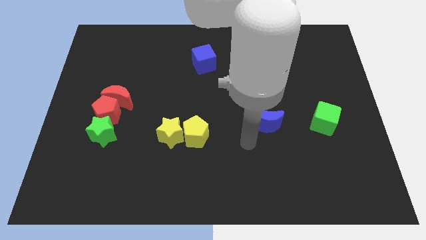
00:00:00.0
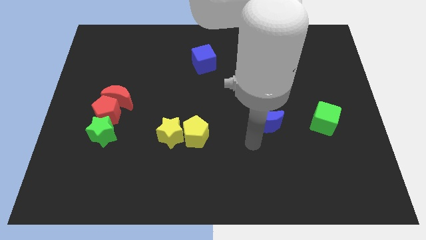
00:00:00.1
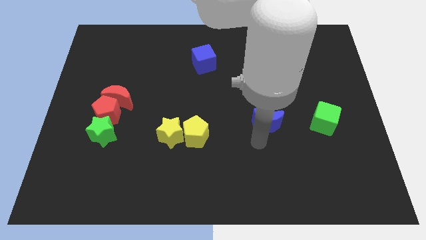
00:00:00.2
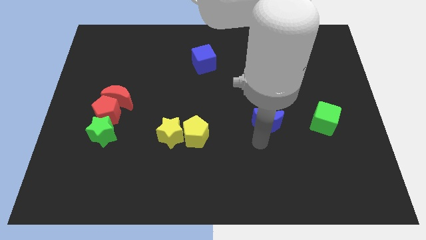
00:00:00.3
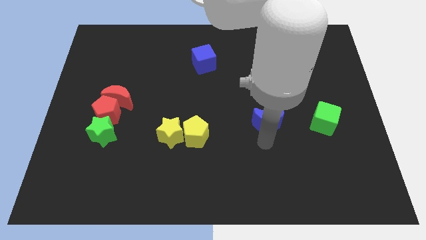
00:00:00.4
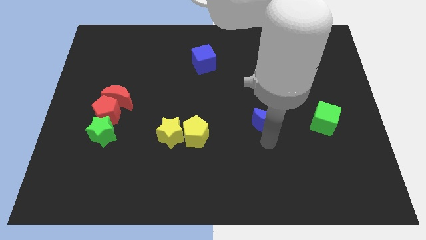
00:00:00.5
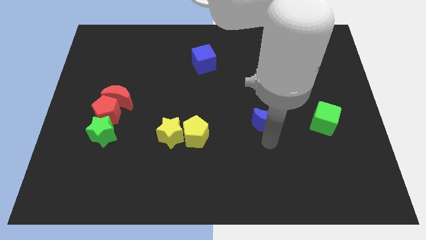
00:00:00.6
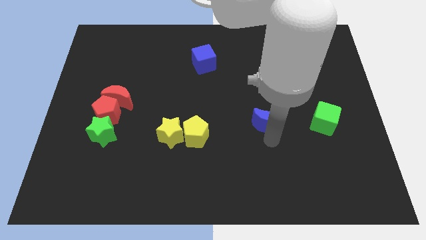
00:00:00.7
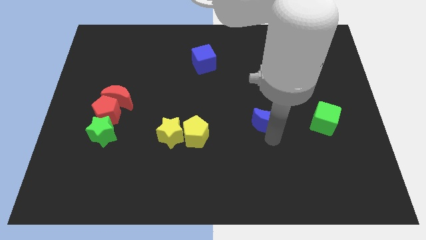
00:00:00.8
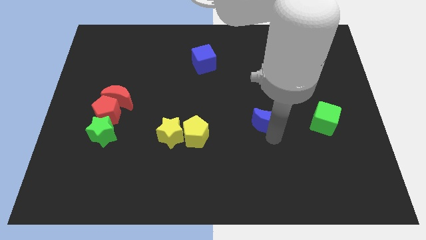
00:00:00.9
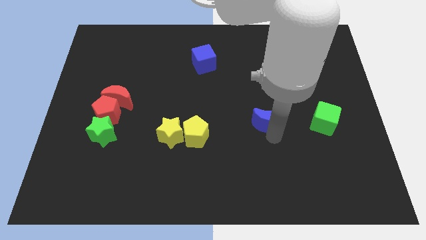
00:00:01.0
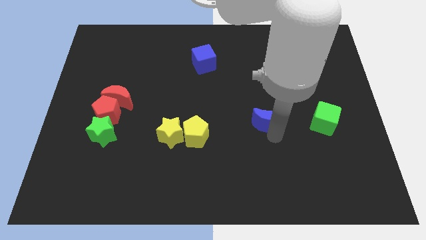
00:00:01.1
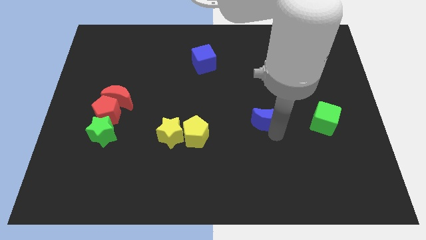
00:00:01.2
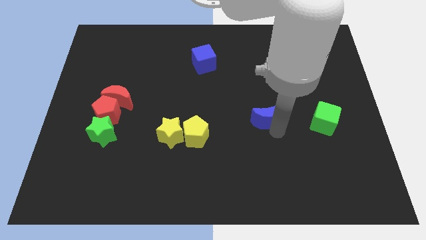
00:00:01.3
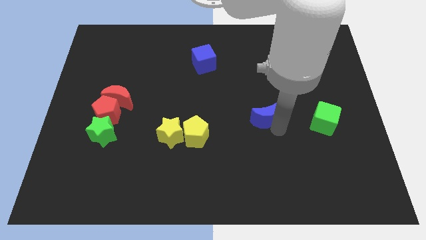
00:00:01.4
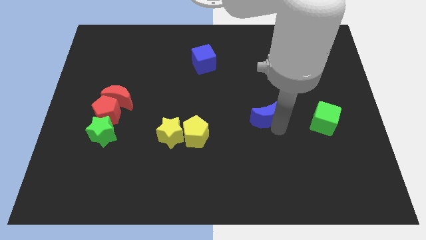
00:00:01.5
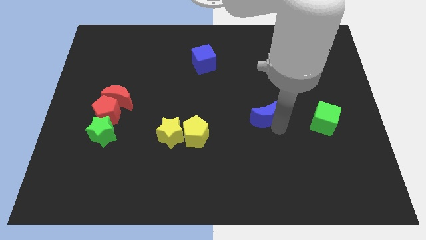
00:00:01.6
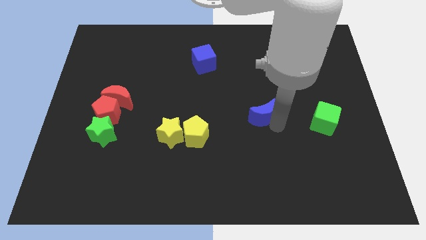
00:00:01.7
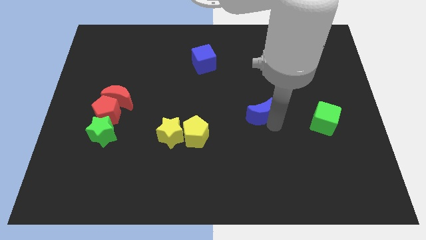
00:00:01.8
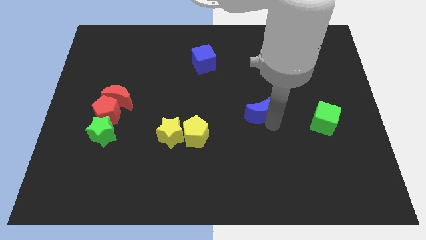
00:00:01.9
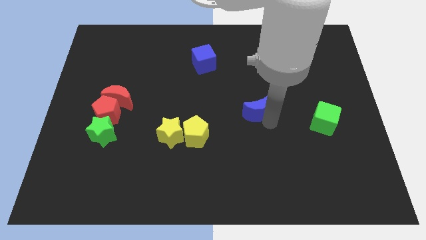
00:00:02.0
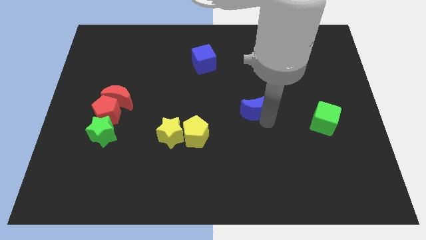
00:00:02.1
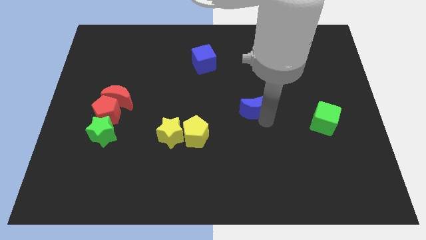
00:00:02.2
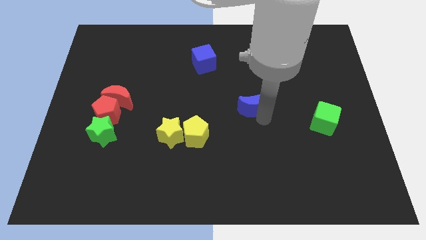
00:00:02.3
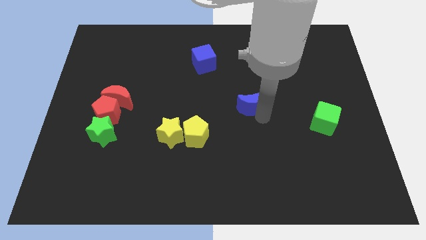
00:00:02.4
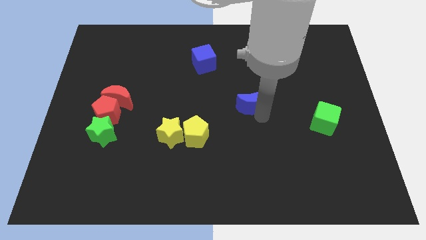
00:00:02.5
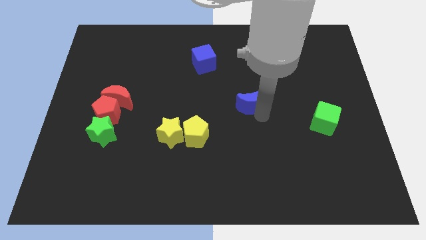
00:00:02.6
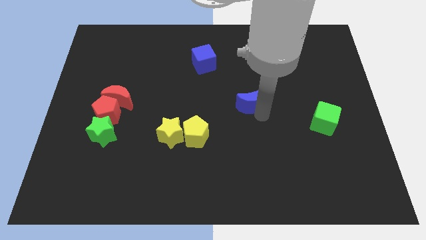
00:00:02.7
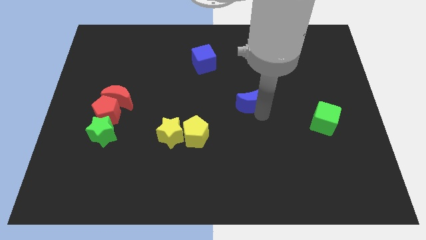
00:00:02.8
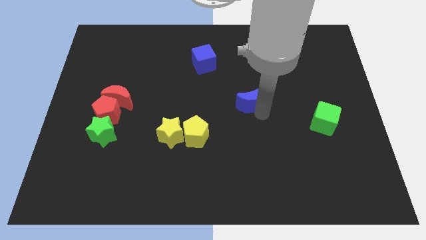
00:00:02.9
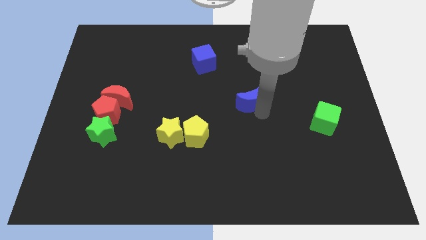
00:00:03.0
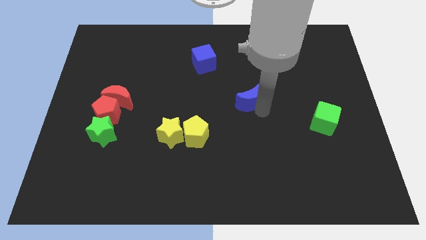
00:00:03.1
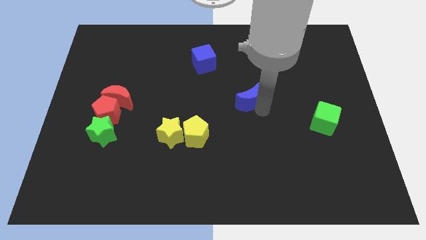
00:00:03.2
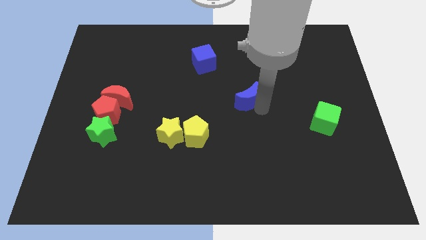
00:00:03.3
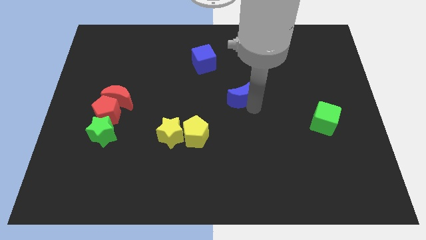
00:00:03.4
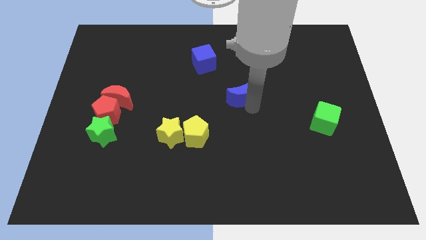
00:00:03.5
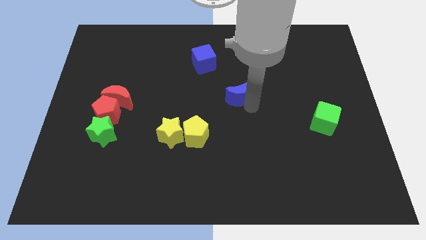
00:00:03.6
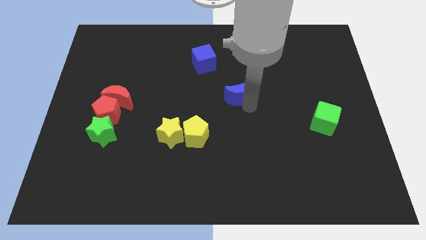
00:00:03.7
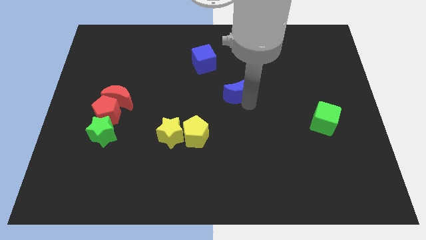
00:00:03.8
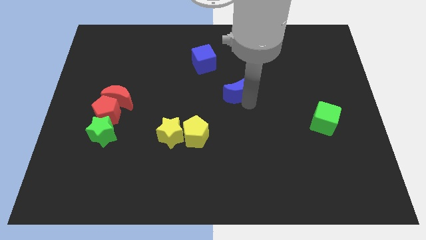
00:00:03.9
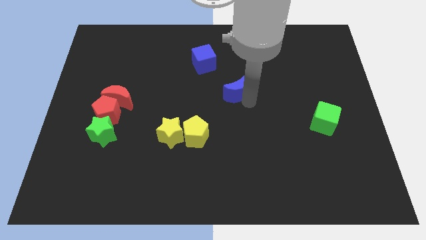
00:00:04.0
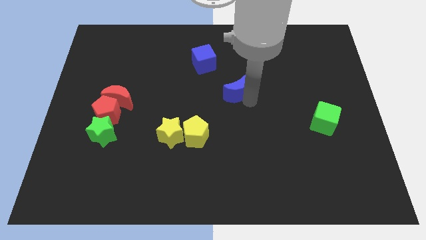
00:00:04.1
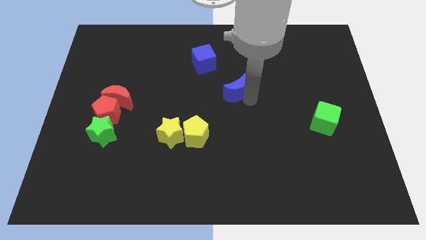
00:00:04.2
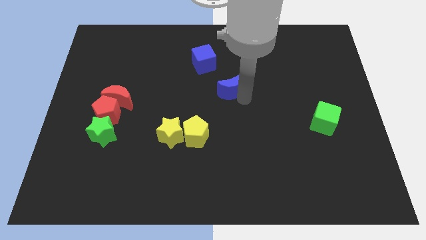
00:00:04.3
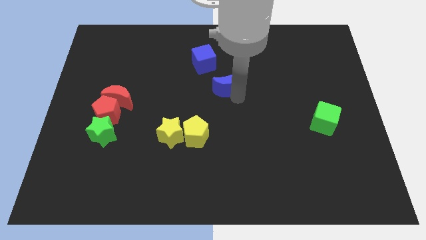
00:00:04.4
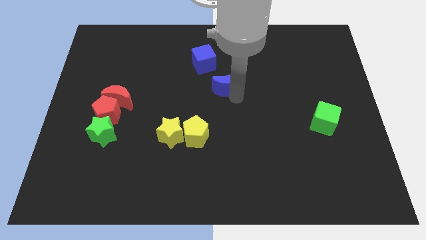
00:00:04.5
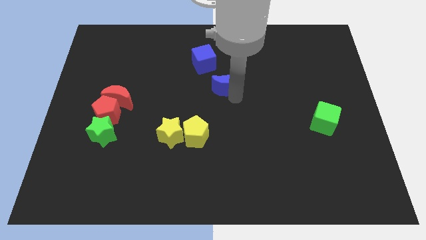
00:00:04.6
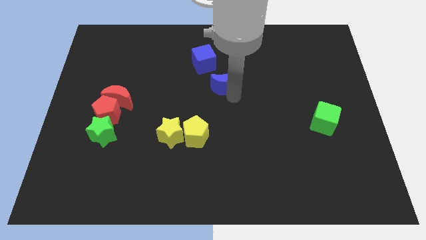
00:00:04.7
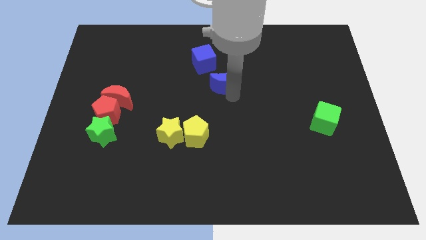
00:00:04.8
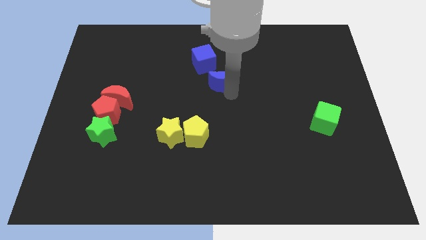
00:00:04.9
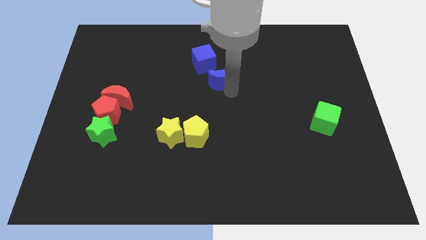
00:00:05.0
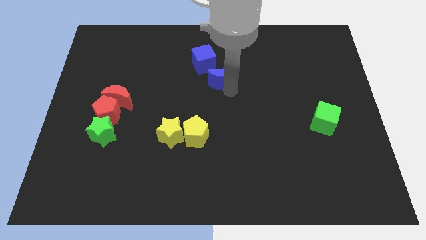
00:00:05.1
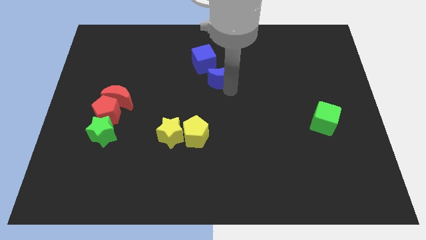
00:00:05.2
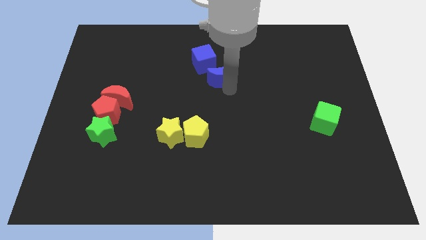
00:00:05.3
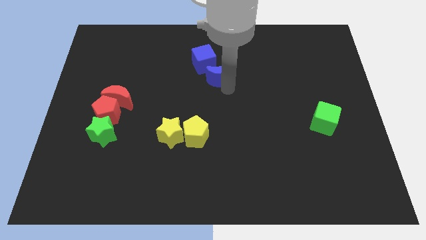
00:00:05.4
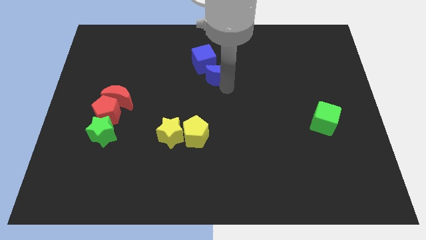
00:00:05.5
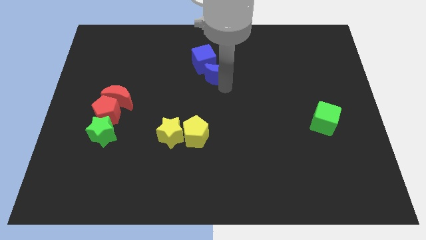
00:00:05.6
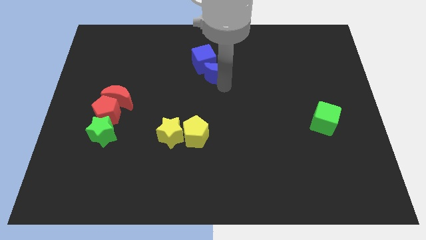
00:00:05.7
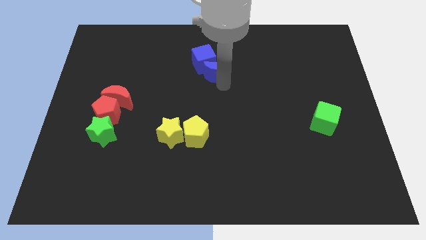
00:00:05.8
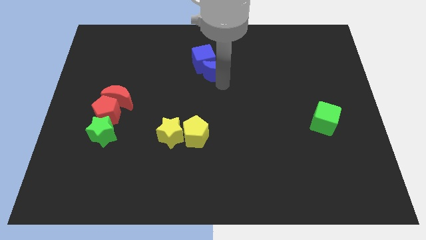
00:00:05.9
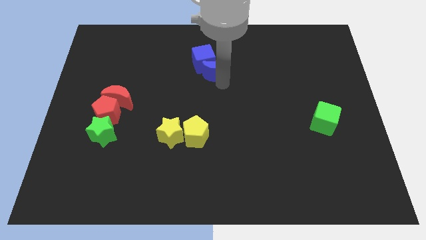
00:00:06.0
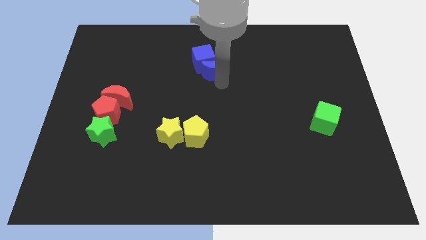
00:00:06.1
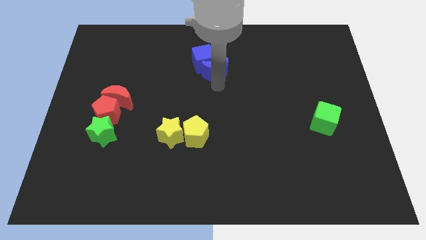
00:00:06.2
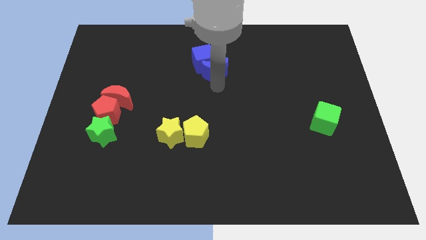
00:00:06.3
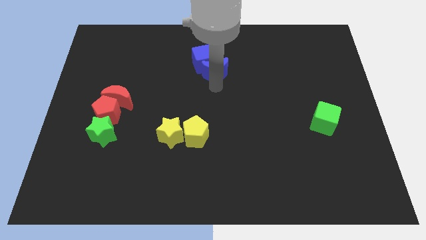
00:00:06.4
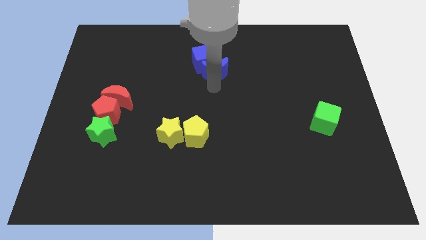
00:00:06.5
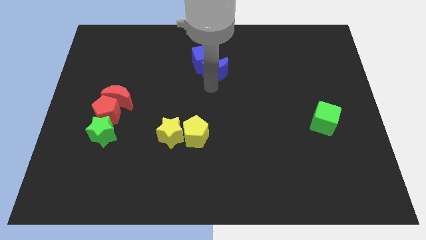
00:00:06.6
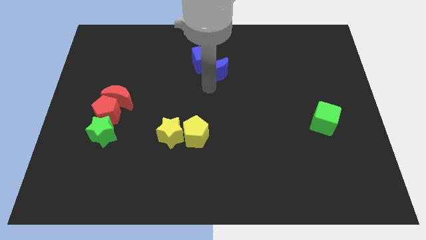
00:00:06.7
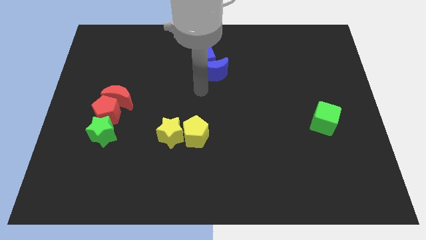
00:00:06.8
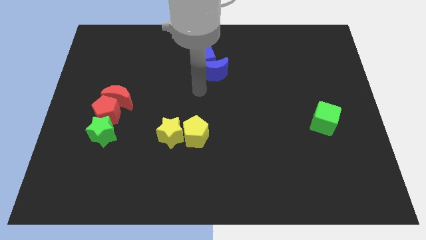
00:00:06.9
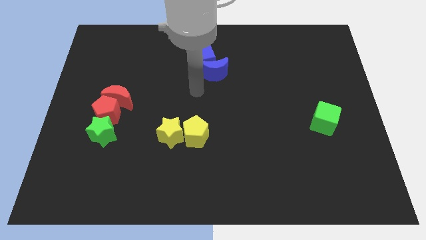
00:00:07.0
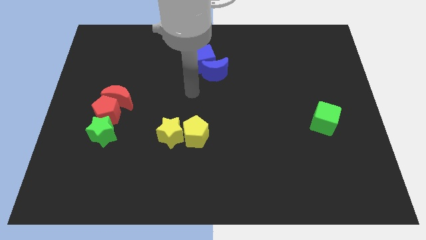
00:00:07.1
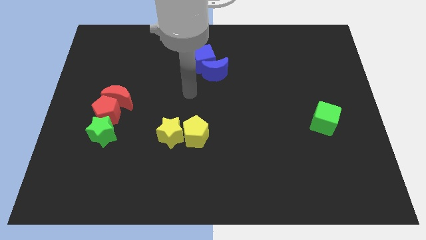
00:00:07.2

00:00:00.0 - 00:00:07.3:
push the blue moon upwards into blue block

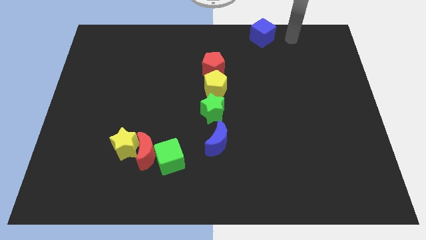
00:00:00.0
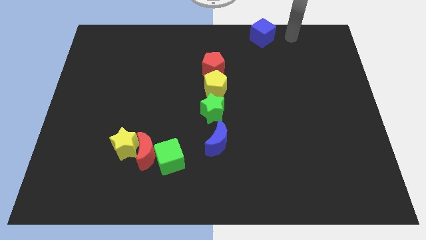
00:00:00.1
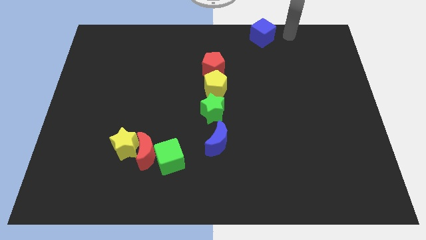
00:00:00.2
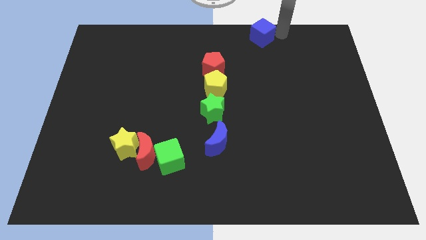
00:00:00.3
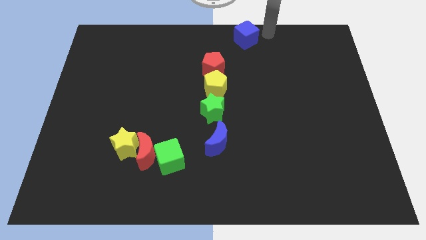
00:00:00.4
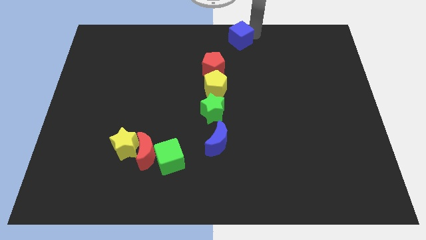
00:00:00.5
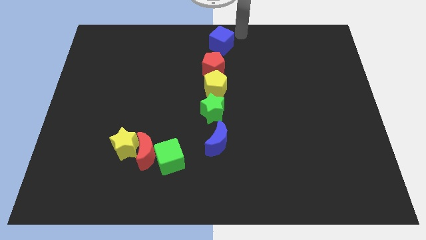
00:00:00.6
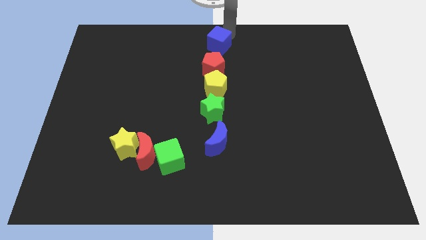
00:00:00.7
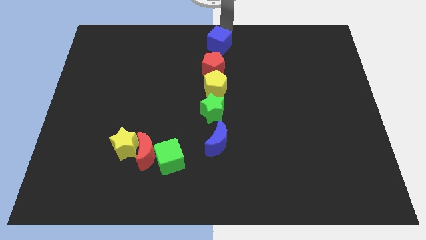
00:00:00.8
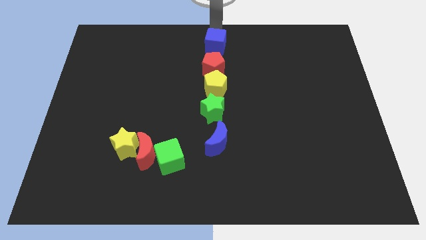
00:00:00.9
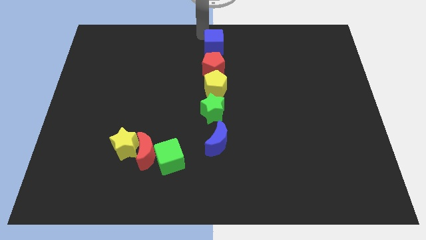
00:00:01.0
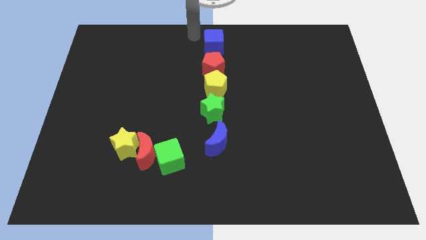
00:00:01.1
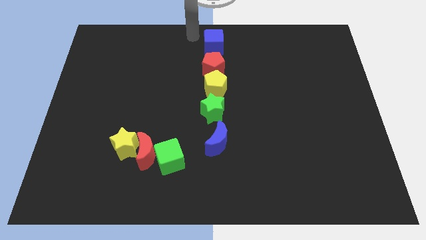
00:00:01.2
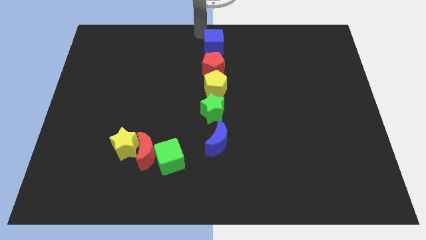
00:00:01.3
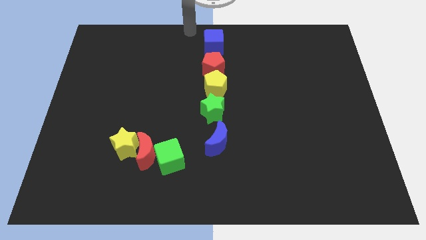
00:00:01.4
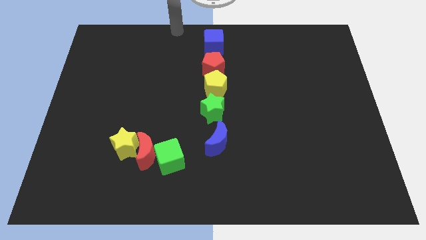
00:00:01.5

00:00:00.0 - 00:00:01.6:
put the blue cube at the top centetr

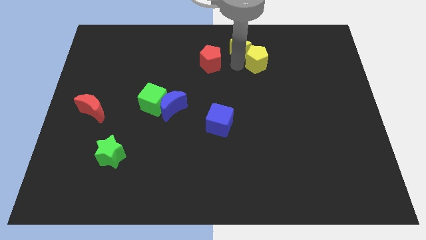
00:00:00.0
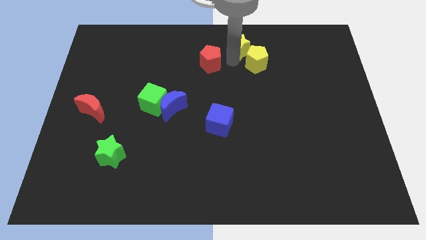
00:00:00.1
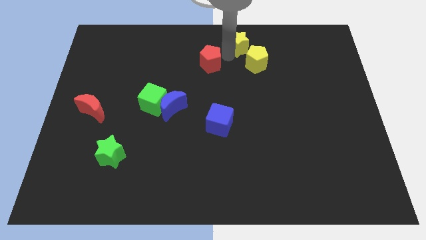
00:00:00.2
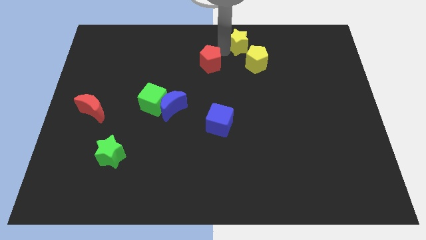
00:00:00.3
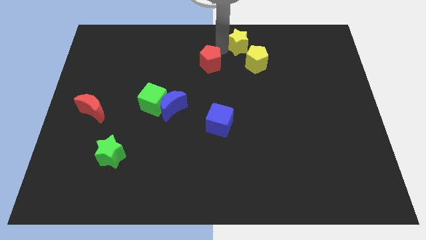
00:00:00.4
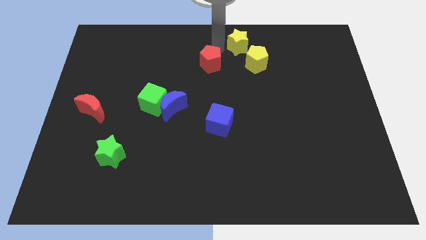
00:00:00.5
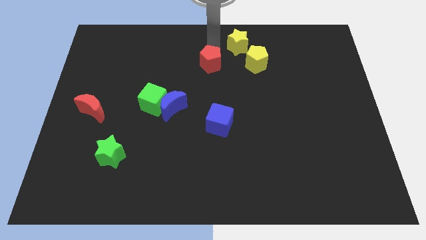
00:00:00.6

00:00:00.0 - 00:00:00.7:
slightly push the yellow star to the top center of the board
